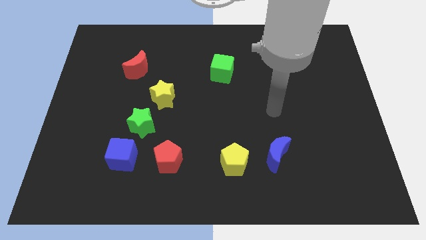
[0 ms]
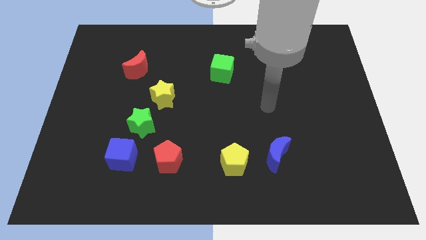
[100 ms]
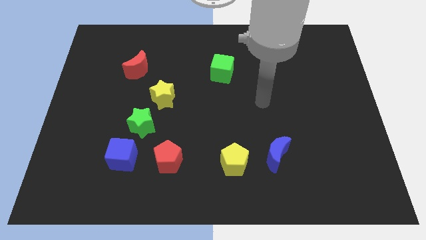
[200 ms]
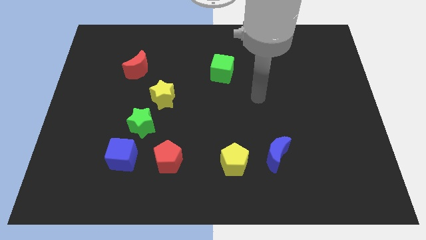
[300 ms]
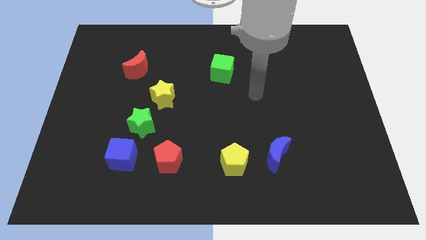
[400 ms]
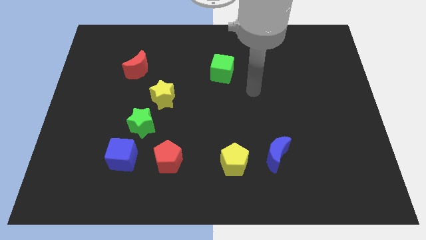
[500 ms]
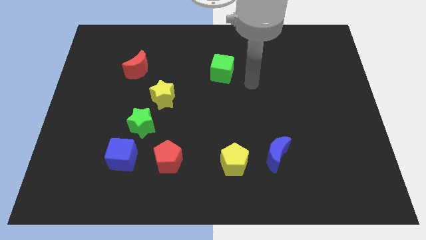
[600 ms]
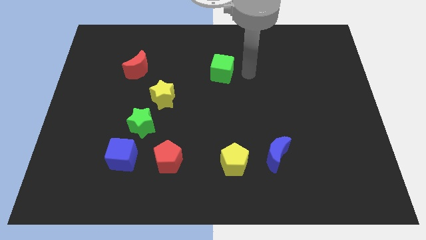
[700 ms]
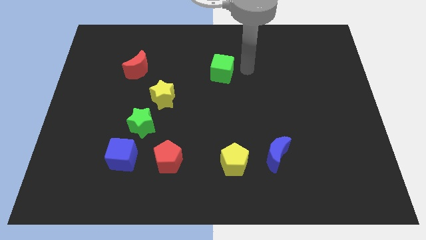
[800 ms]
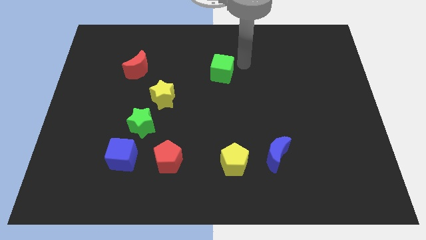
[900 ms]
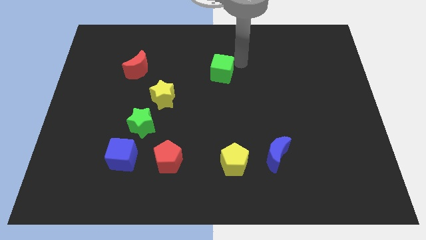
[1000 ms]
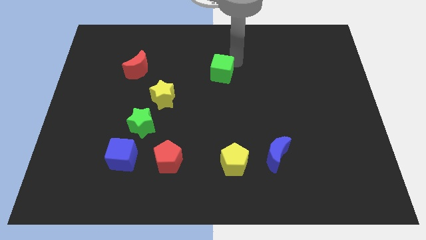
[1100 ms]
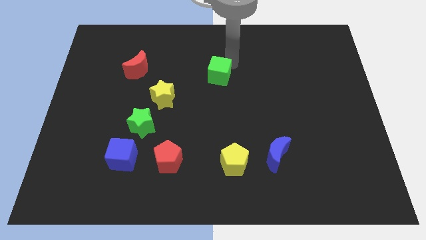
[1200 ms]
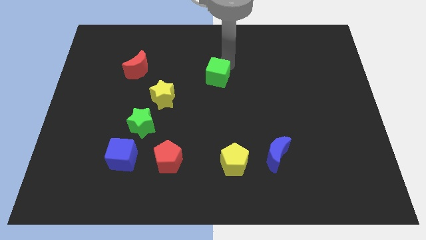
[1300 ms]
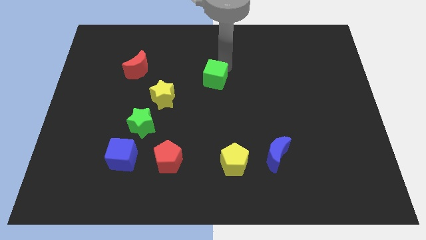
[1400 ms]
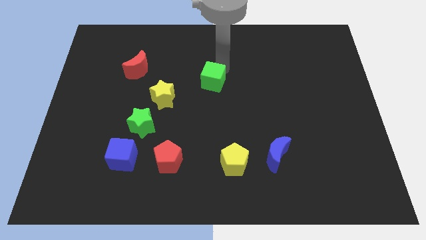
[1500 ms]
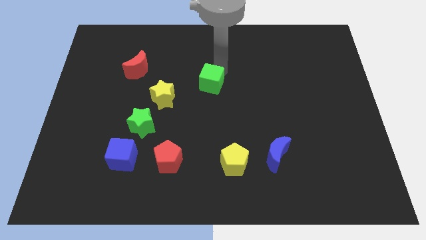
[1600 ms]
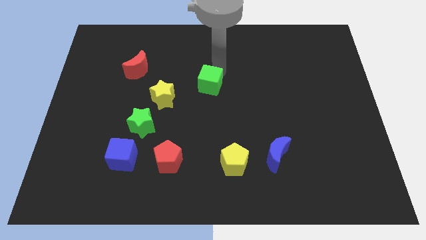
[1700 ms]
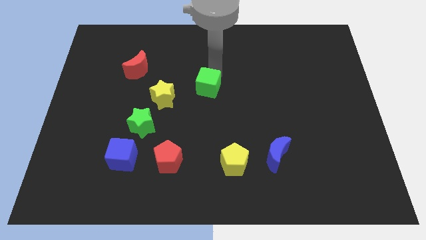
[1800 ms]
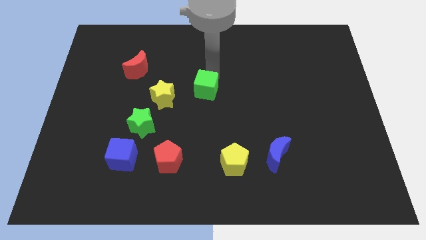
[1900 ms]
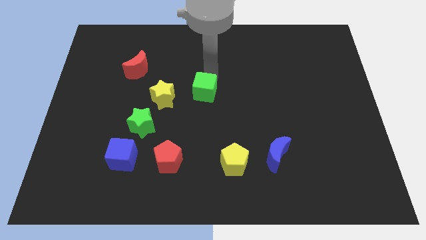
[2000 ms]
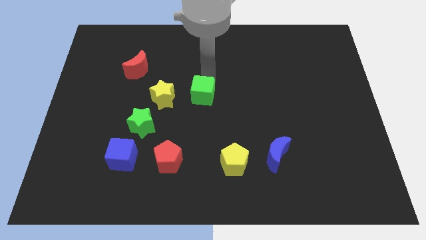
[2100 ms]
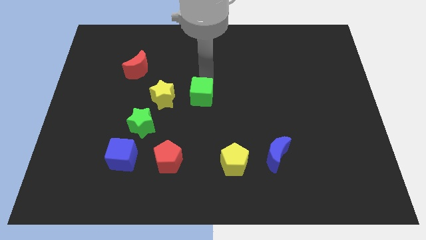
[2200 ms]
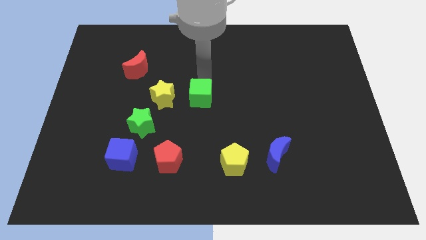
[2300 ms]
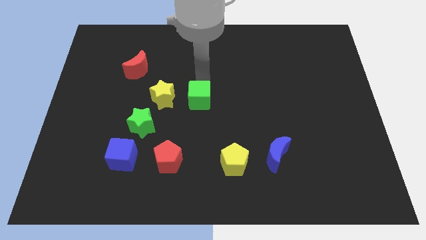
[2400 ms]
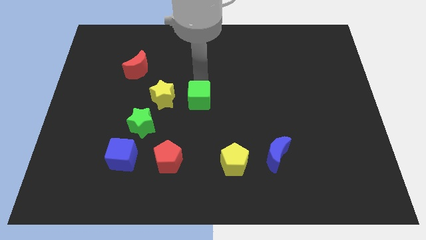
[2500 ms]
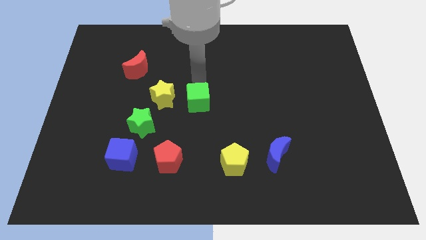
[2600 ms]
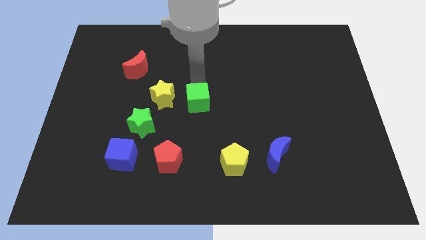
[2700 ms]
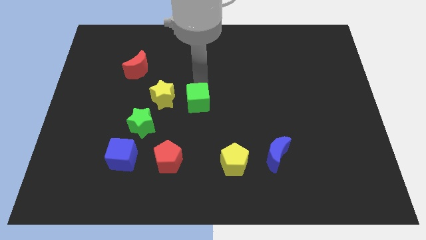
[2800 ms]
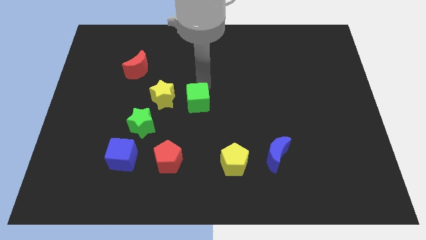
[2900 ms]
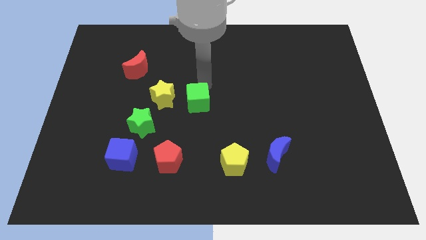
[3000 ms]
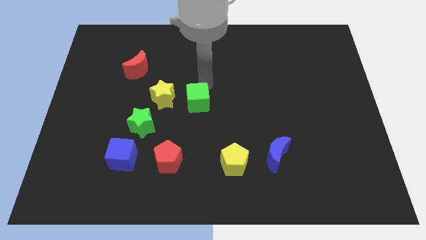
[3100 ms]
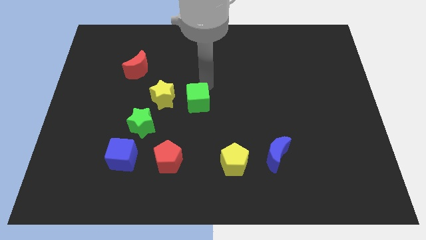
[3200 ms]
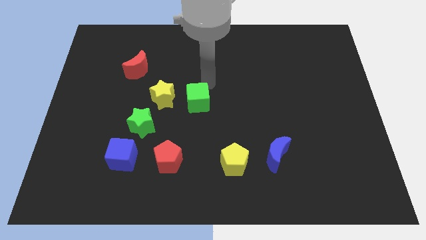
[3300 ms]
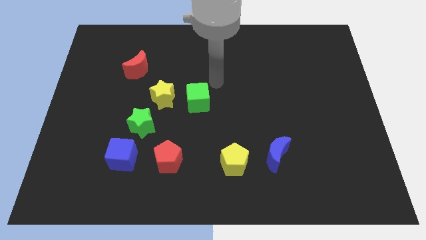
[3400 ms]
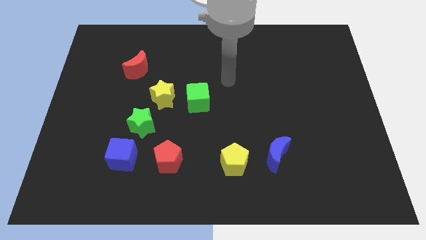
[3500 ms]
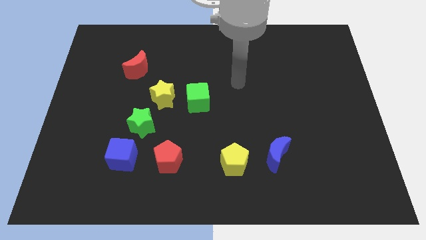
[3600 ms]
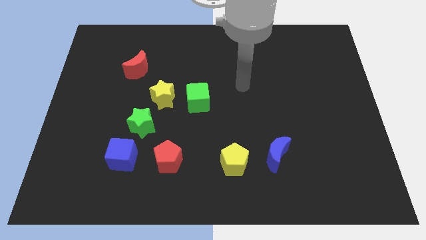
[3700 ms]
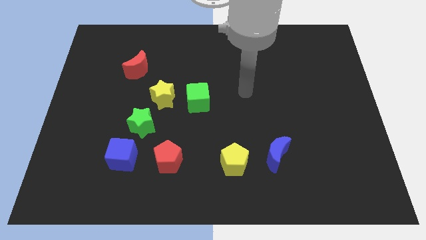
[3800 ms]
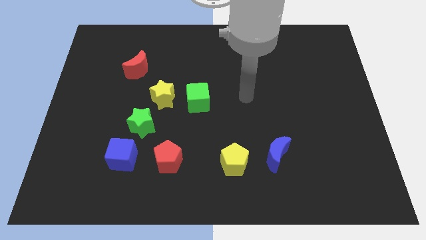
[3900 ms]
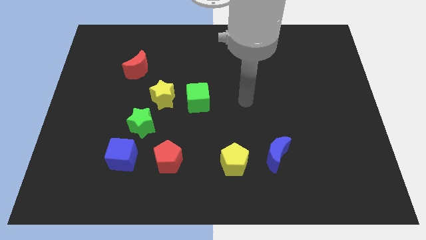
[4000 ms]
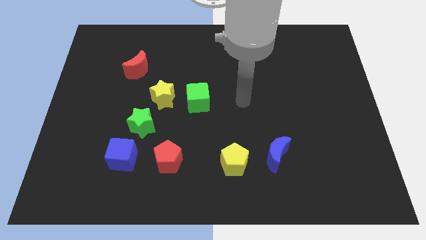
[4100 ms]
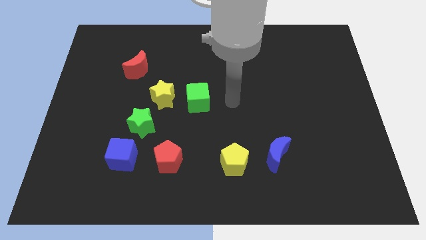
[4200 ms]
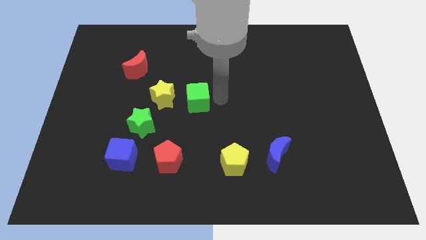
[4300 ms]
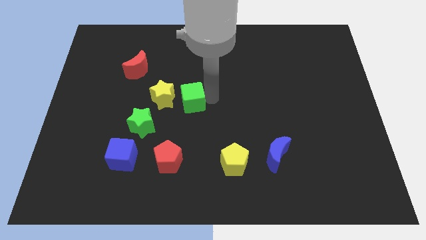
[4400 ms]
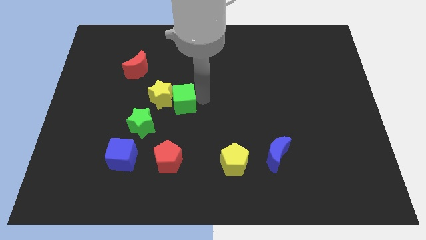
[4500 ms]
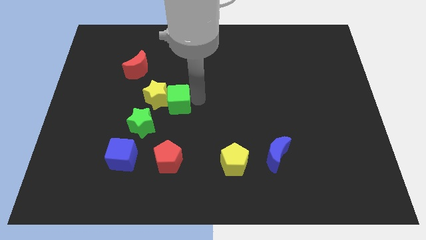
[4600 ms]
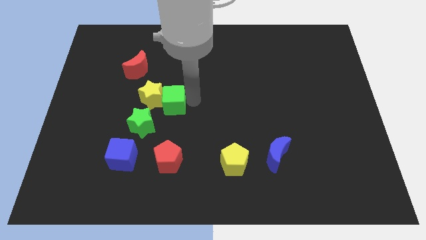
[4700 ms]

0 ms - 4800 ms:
push the green cube to the yellow star

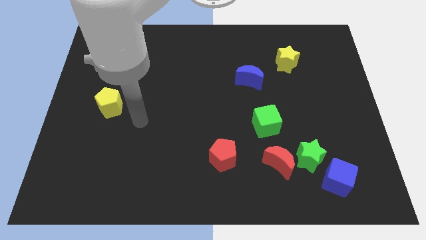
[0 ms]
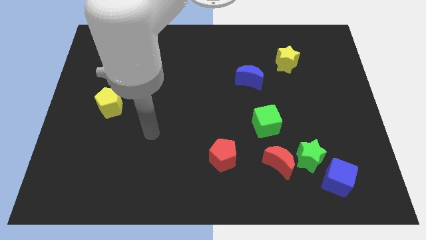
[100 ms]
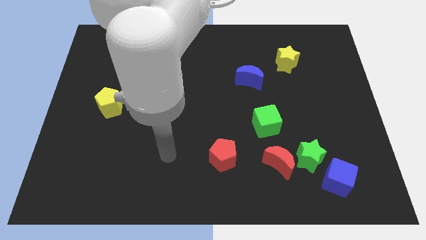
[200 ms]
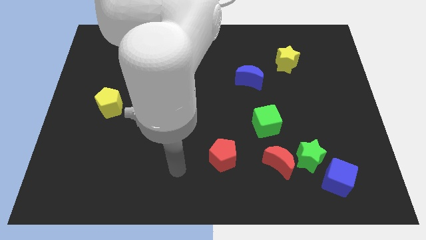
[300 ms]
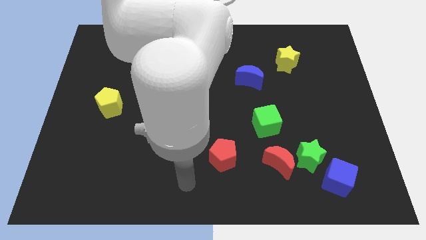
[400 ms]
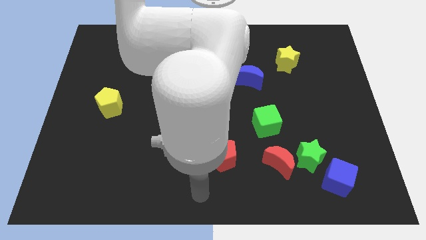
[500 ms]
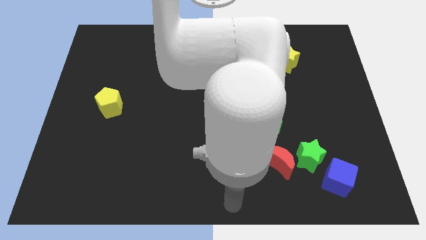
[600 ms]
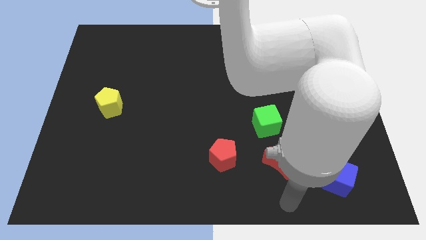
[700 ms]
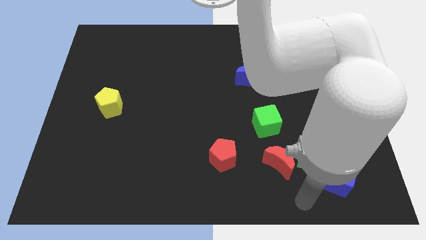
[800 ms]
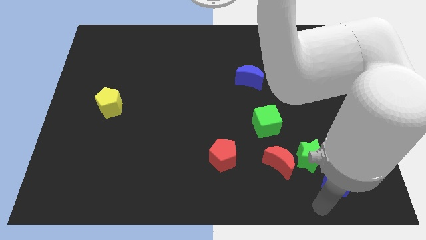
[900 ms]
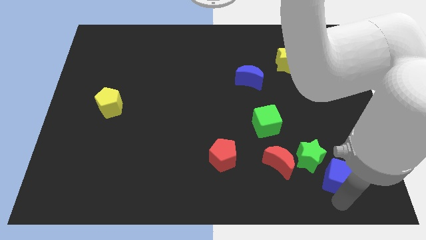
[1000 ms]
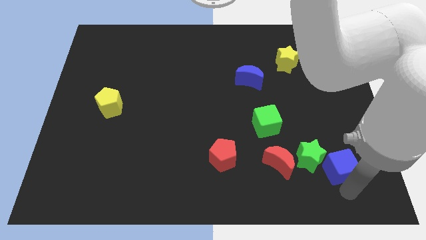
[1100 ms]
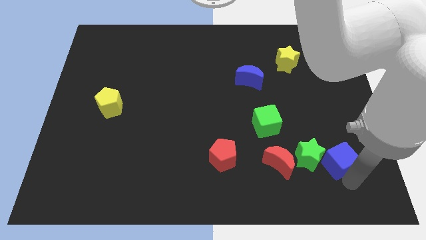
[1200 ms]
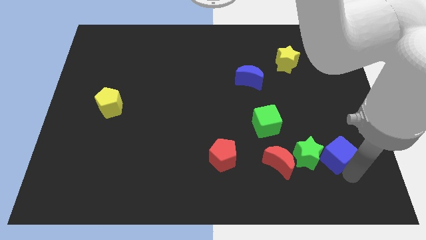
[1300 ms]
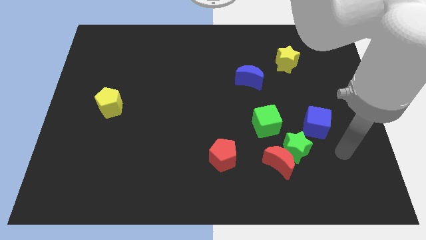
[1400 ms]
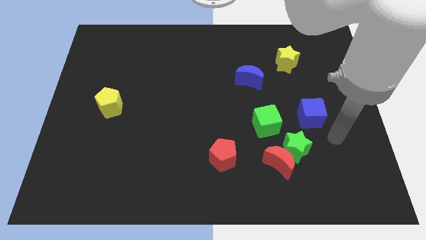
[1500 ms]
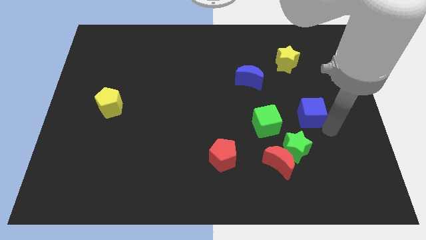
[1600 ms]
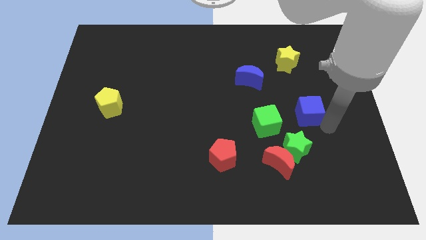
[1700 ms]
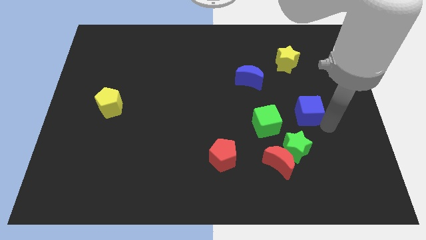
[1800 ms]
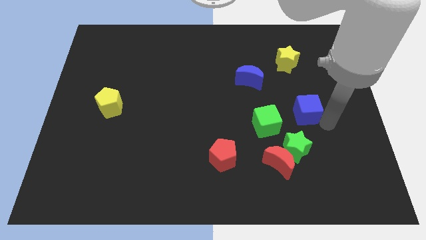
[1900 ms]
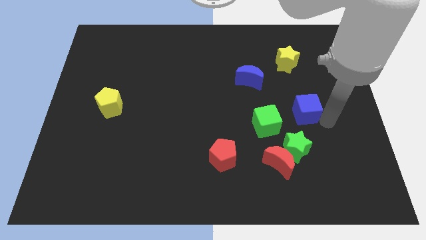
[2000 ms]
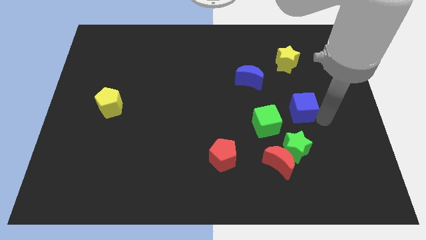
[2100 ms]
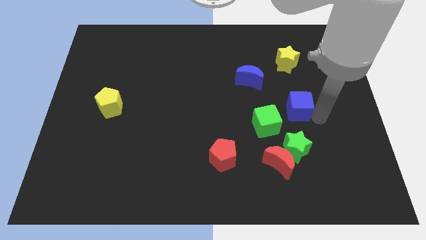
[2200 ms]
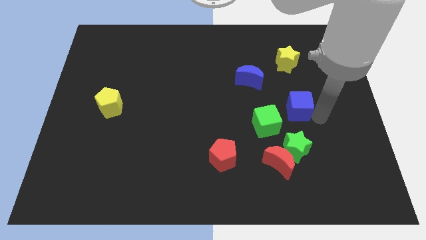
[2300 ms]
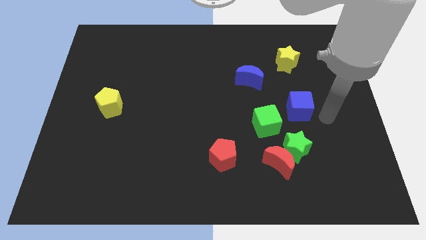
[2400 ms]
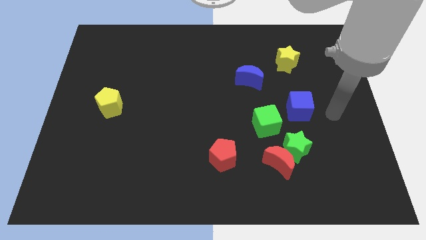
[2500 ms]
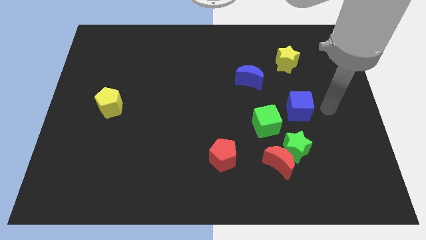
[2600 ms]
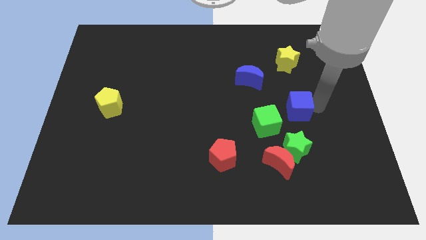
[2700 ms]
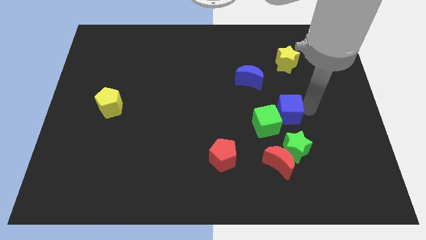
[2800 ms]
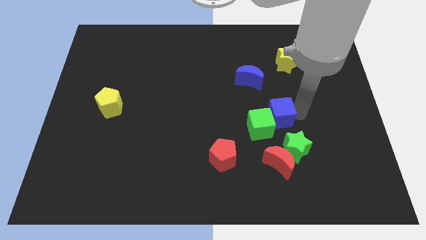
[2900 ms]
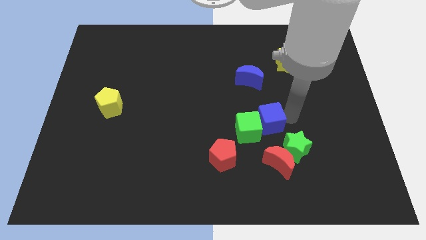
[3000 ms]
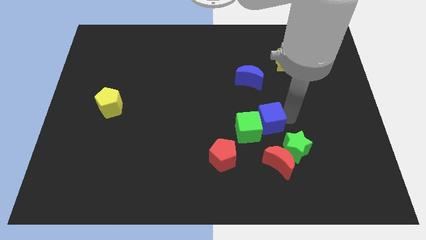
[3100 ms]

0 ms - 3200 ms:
push the blue cube next to the green cube

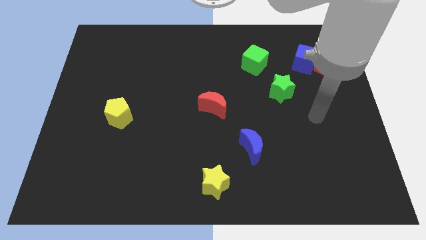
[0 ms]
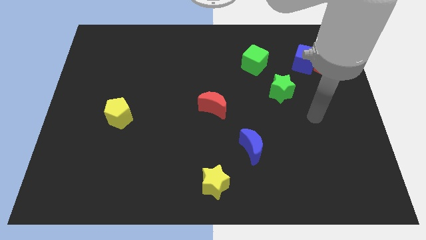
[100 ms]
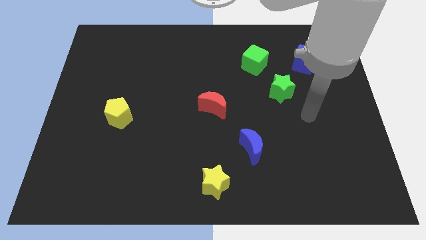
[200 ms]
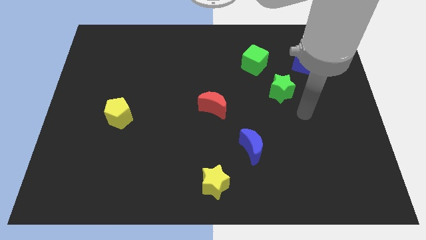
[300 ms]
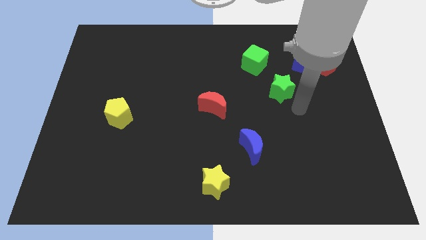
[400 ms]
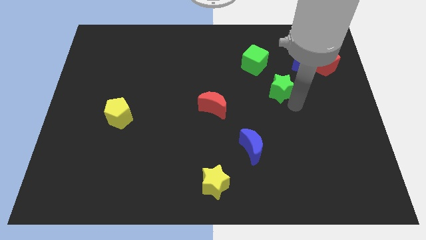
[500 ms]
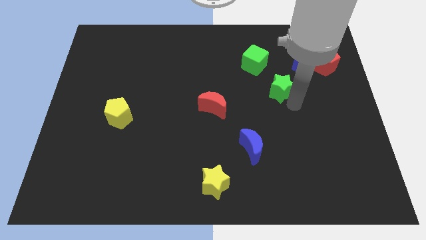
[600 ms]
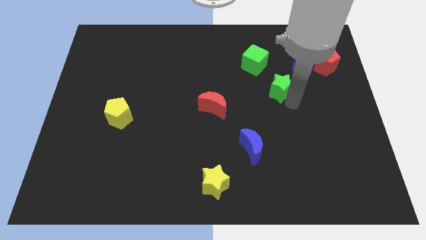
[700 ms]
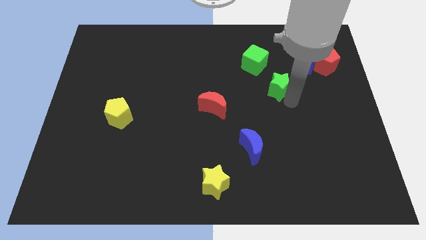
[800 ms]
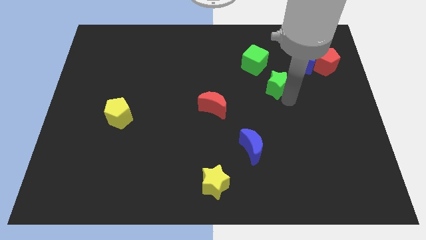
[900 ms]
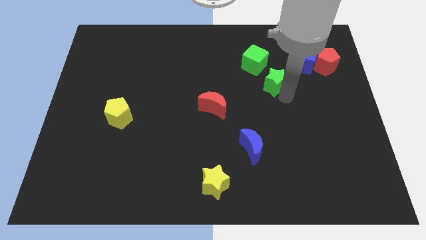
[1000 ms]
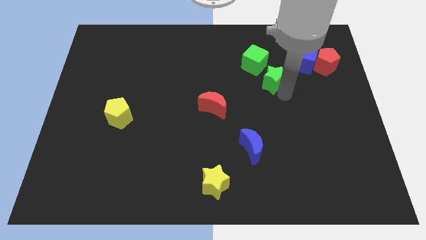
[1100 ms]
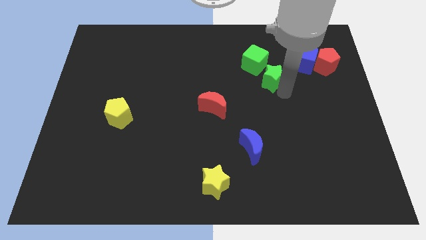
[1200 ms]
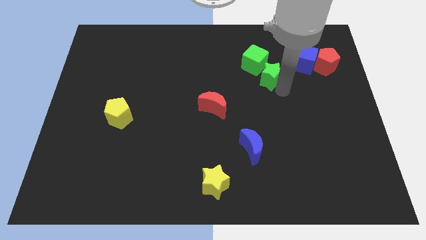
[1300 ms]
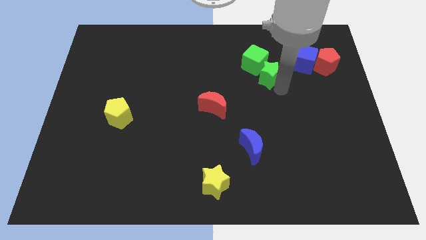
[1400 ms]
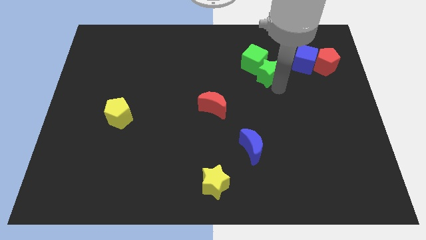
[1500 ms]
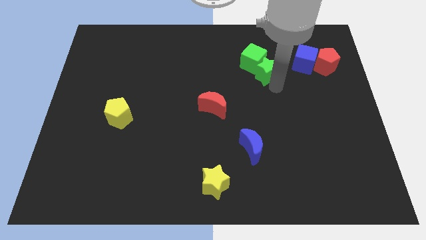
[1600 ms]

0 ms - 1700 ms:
push the green star to the green cube
